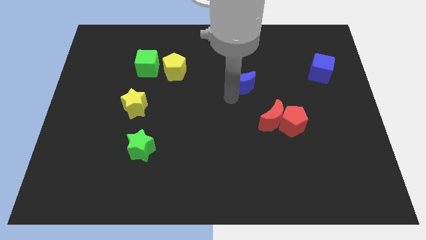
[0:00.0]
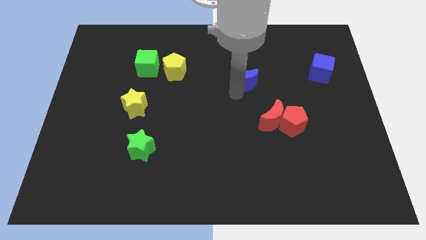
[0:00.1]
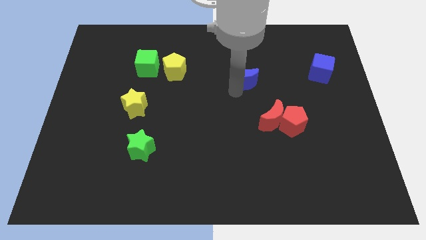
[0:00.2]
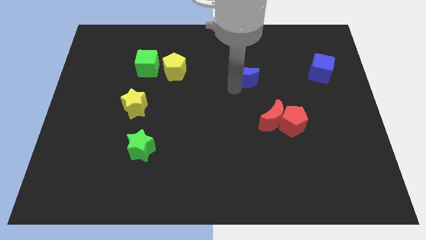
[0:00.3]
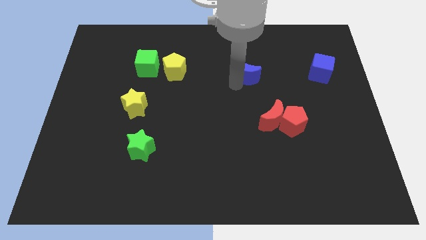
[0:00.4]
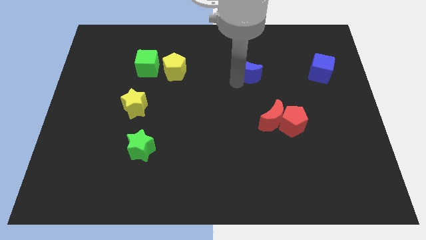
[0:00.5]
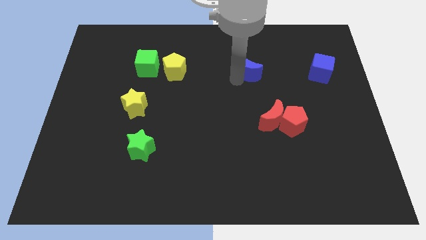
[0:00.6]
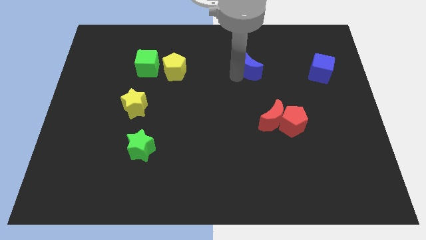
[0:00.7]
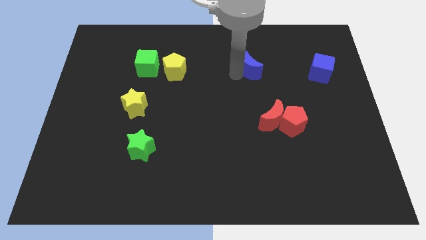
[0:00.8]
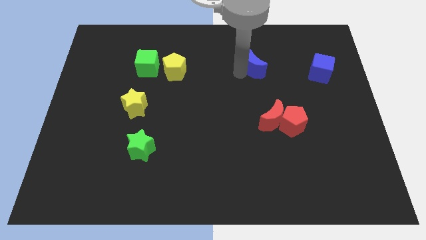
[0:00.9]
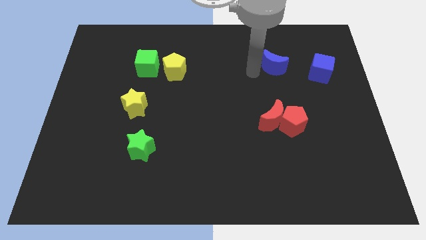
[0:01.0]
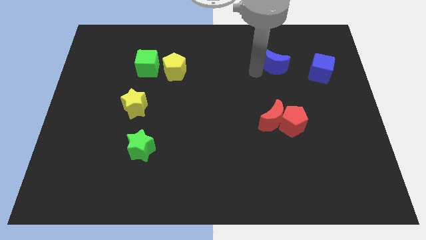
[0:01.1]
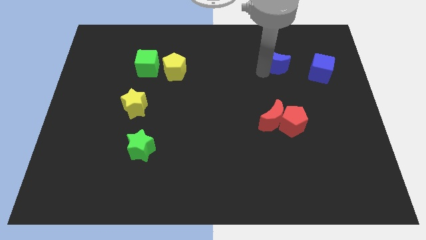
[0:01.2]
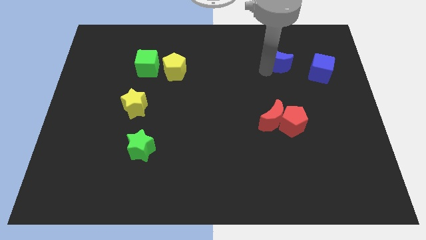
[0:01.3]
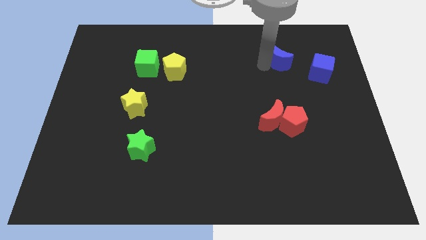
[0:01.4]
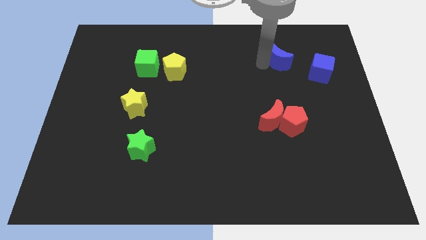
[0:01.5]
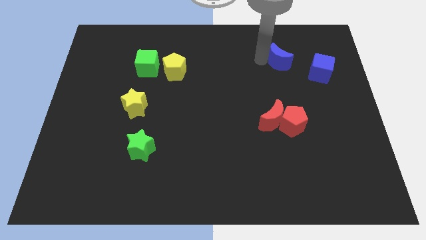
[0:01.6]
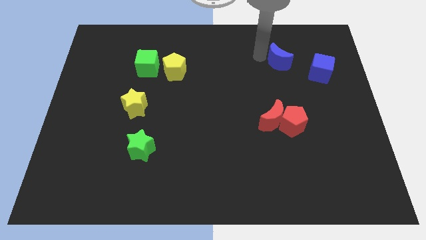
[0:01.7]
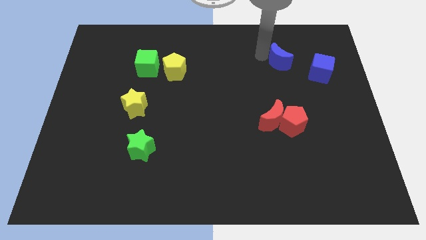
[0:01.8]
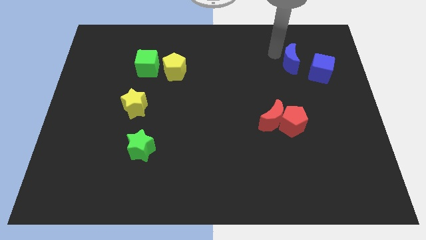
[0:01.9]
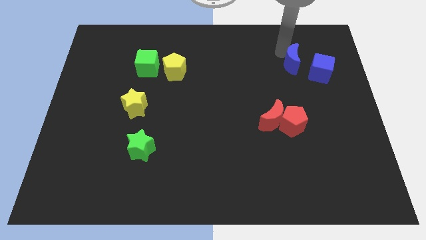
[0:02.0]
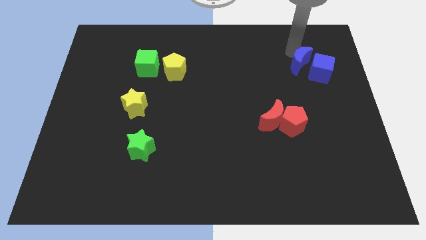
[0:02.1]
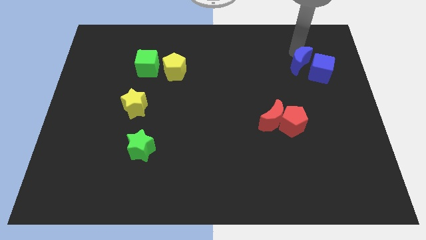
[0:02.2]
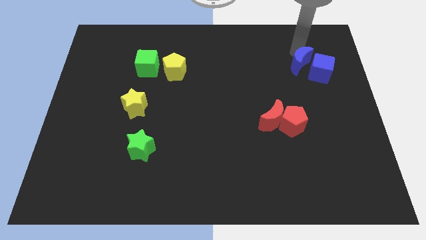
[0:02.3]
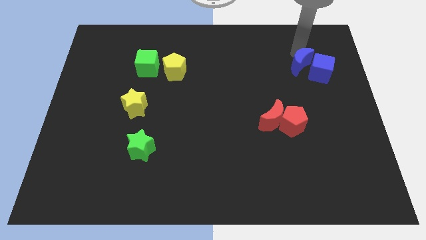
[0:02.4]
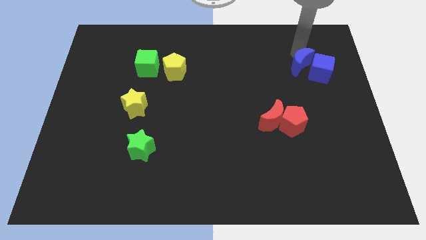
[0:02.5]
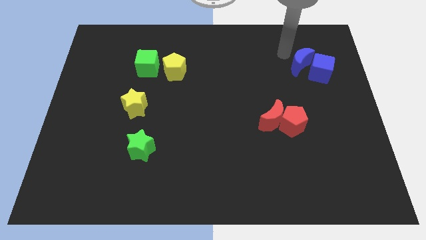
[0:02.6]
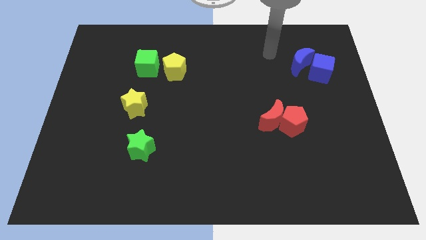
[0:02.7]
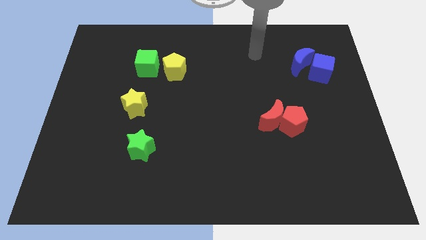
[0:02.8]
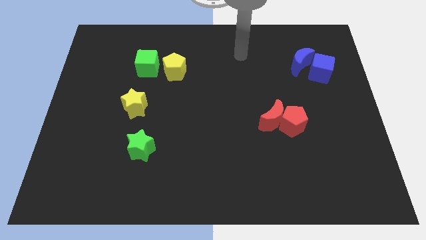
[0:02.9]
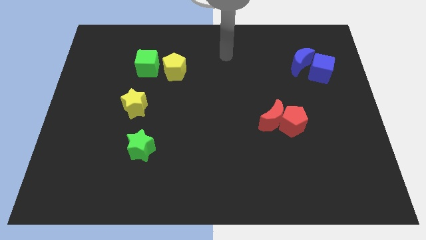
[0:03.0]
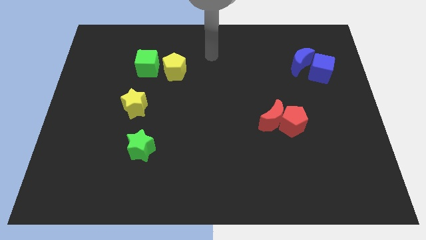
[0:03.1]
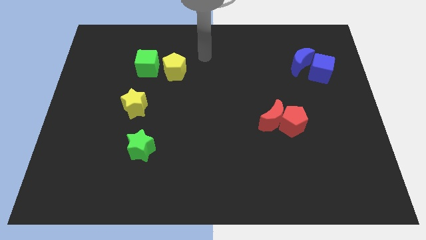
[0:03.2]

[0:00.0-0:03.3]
move blue moon into the blue cube

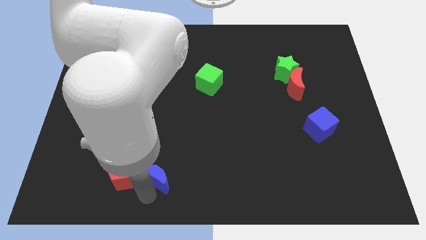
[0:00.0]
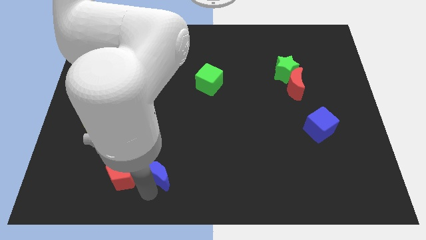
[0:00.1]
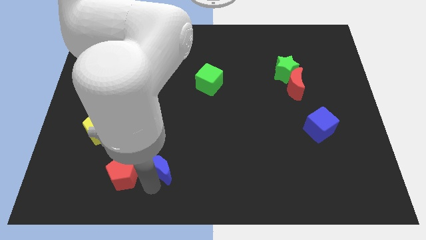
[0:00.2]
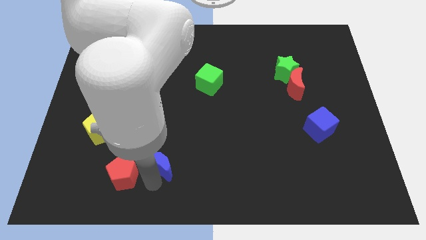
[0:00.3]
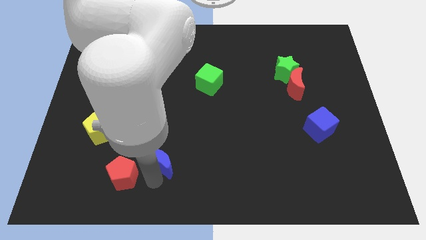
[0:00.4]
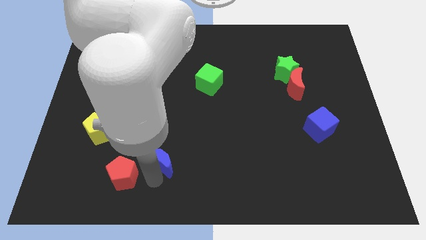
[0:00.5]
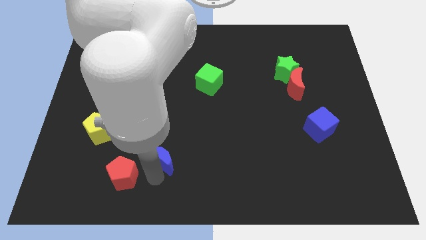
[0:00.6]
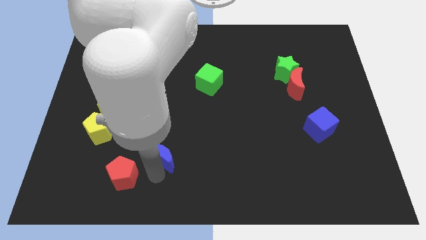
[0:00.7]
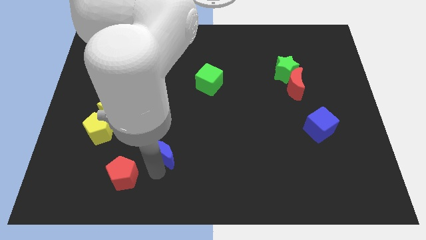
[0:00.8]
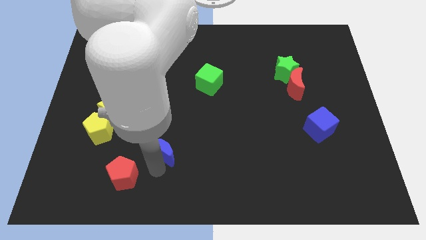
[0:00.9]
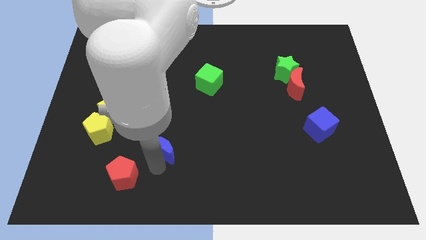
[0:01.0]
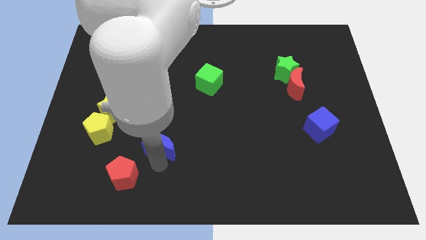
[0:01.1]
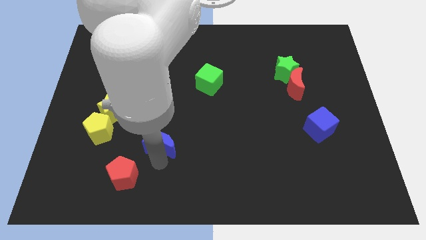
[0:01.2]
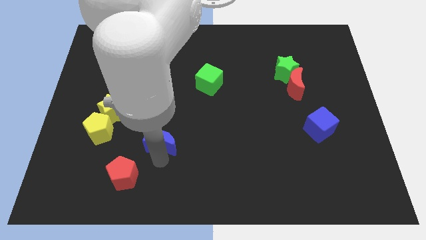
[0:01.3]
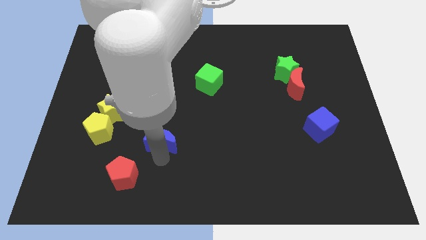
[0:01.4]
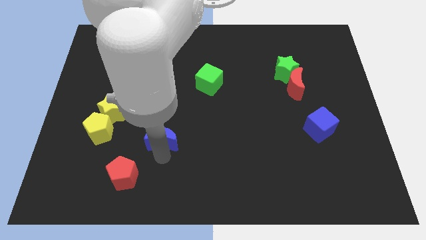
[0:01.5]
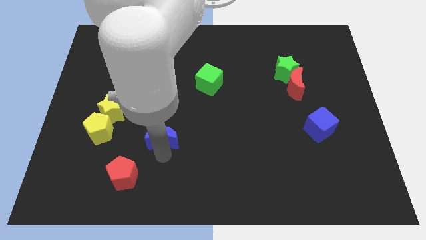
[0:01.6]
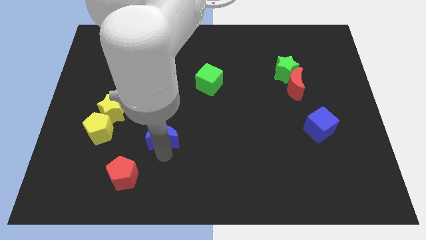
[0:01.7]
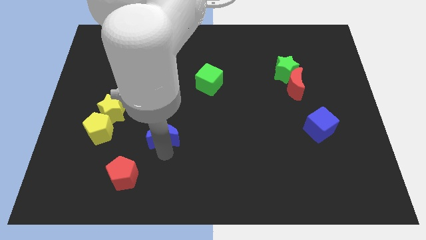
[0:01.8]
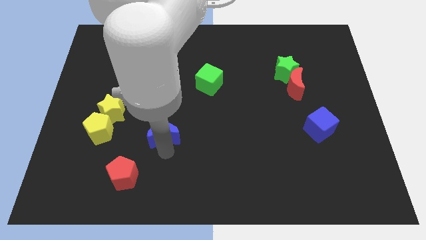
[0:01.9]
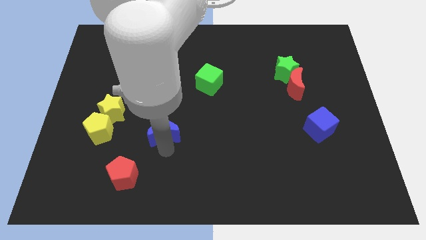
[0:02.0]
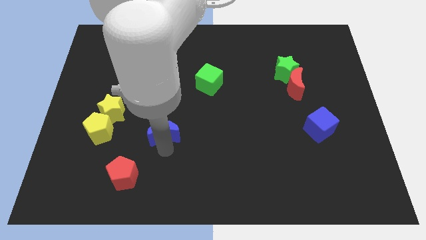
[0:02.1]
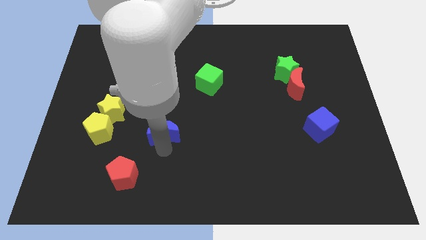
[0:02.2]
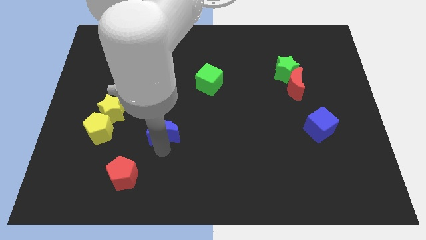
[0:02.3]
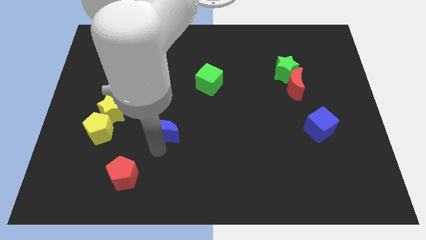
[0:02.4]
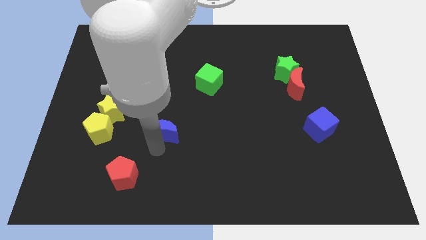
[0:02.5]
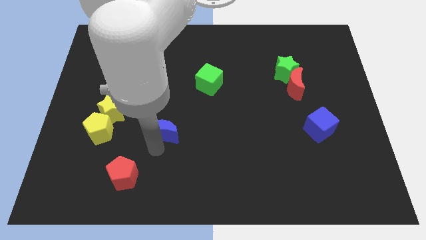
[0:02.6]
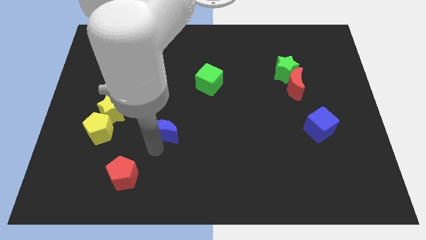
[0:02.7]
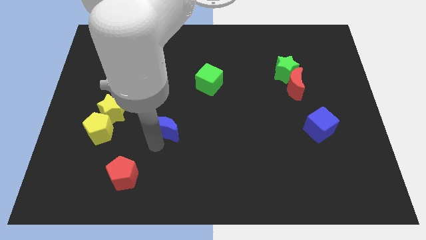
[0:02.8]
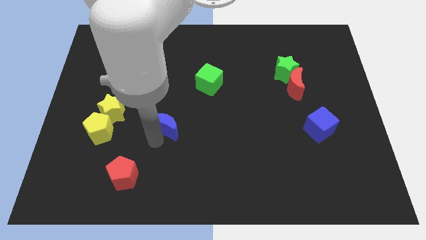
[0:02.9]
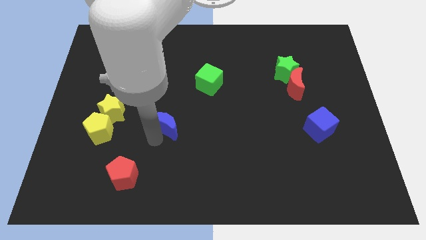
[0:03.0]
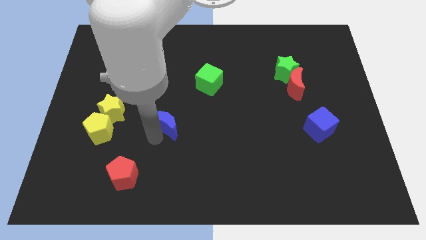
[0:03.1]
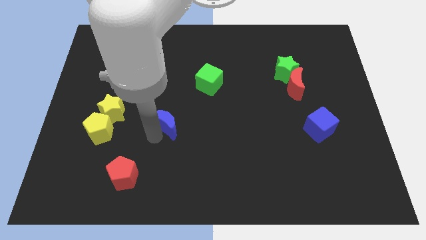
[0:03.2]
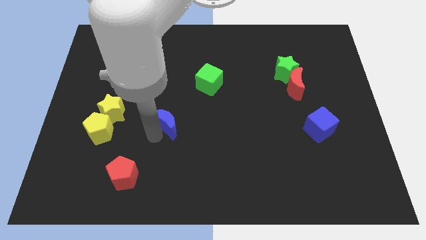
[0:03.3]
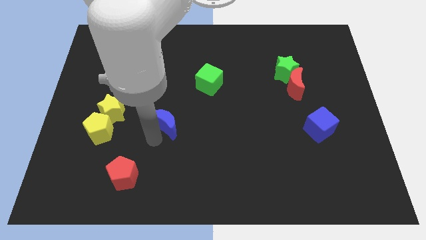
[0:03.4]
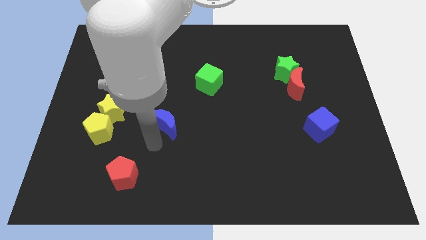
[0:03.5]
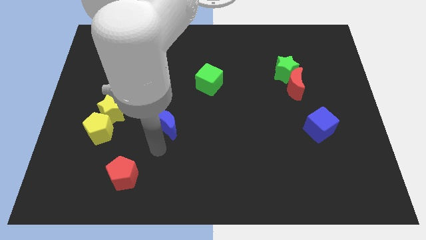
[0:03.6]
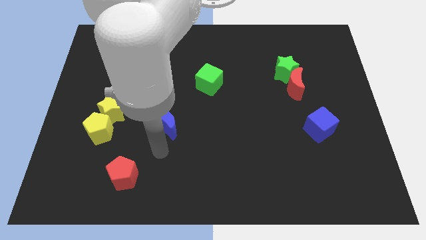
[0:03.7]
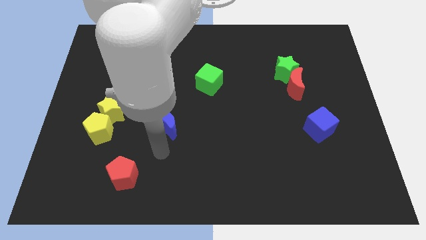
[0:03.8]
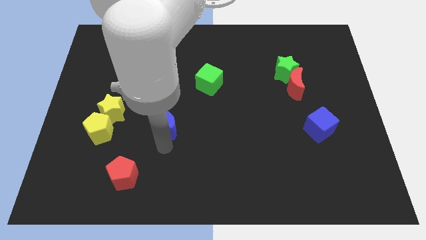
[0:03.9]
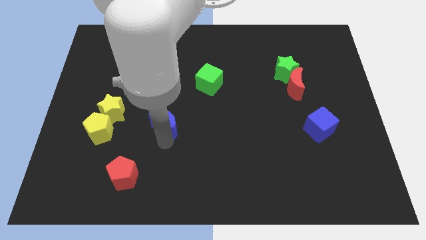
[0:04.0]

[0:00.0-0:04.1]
place the blue moon between green cube and red pentagon diagonally

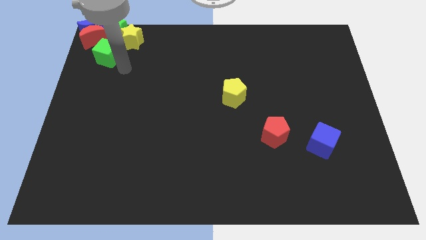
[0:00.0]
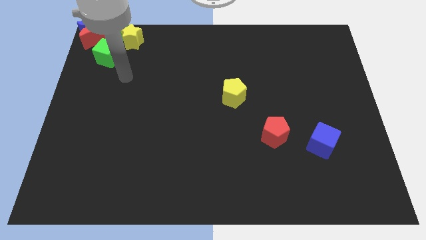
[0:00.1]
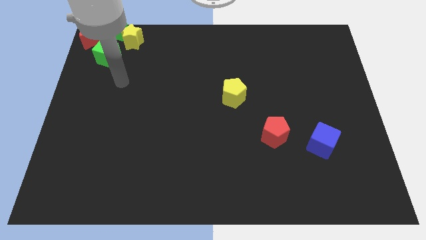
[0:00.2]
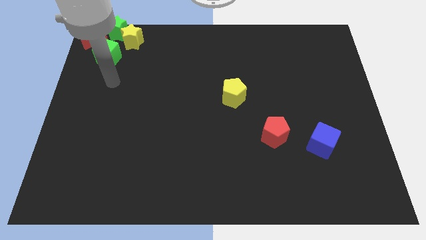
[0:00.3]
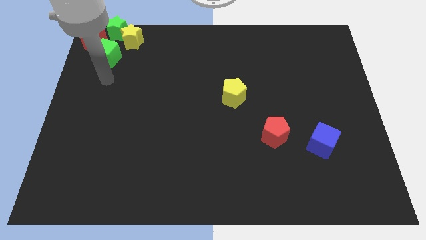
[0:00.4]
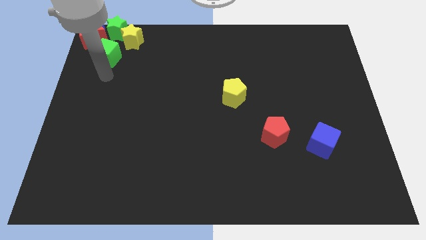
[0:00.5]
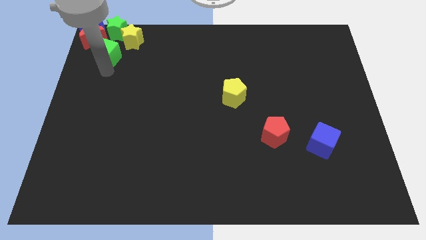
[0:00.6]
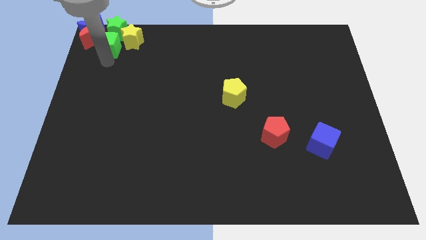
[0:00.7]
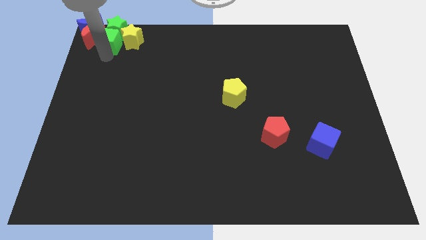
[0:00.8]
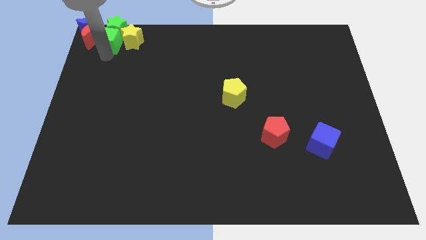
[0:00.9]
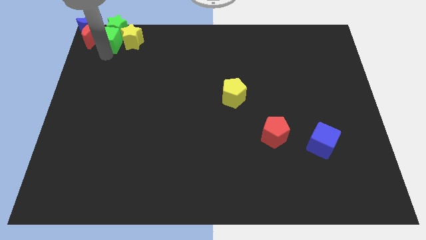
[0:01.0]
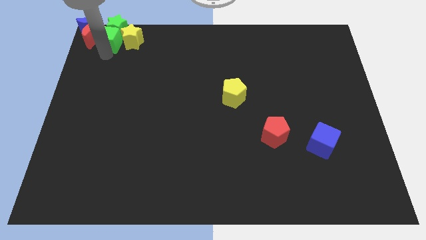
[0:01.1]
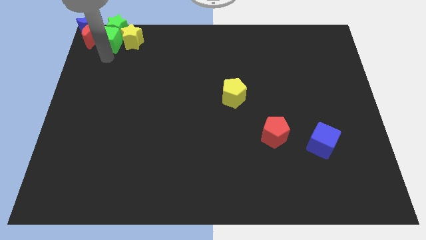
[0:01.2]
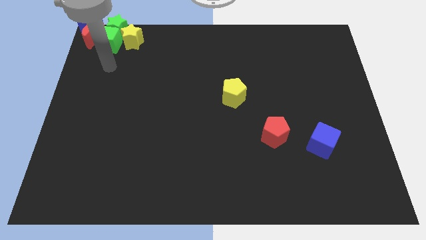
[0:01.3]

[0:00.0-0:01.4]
push the green cube into the green star
